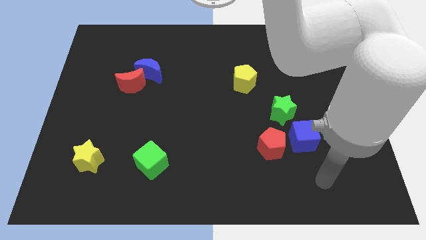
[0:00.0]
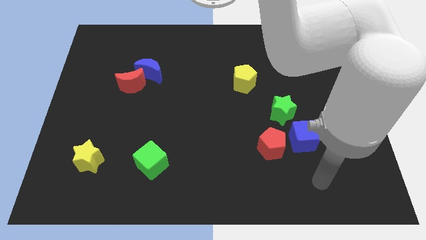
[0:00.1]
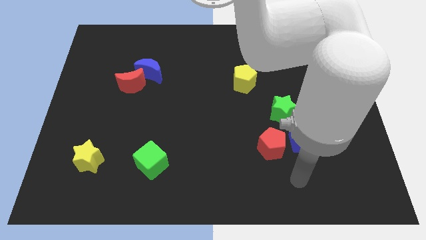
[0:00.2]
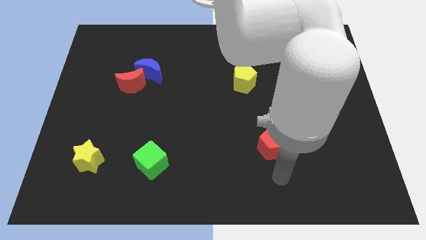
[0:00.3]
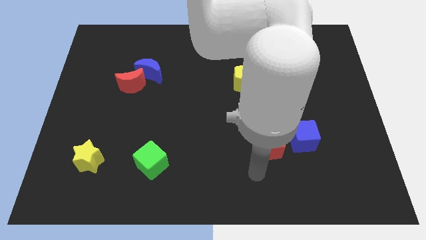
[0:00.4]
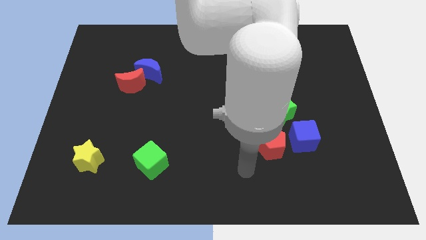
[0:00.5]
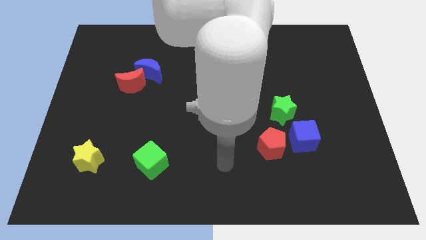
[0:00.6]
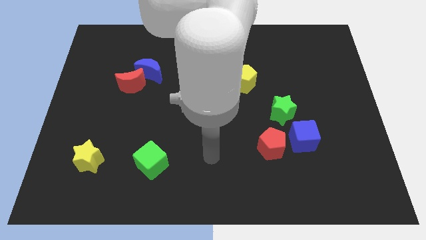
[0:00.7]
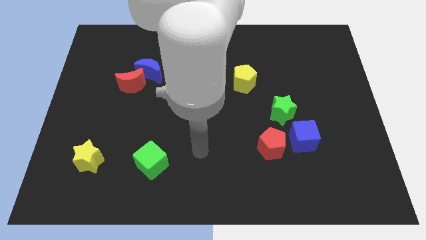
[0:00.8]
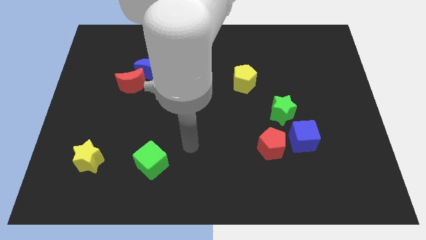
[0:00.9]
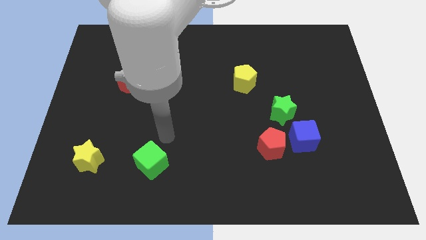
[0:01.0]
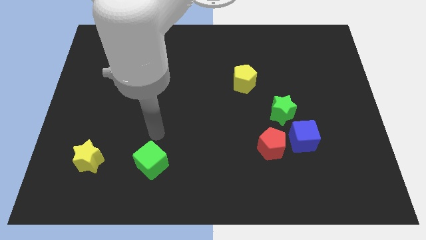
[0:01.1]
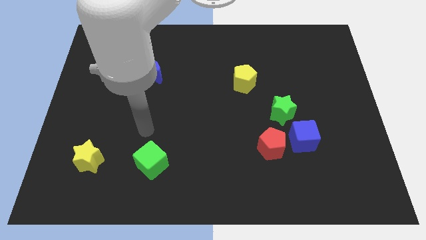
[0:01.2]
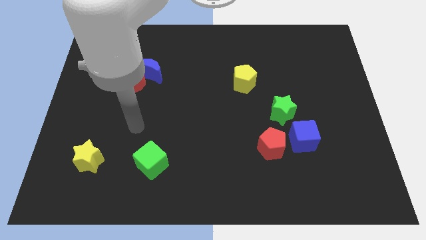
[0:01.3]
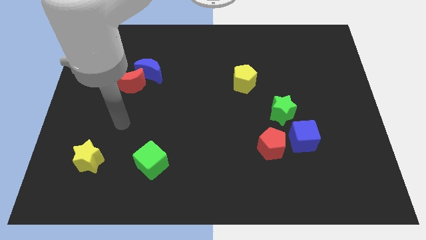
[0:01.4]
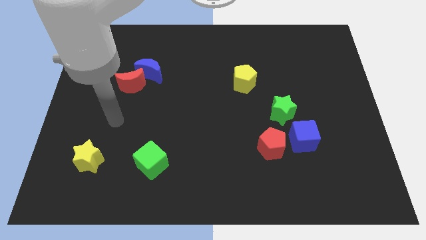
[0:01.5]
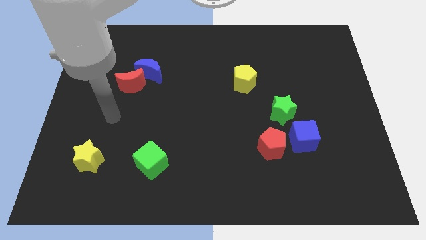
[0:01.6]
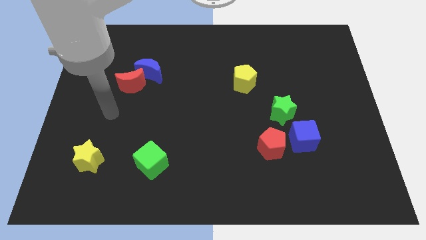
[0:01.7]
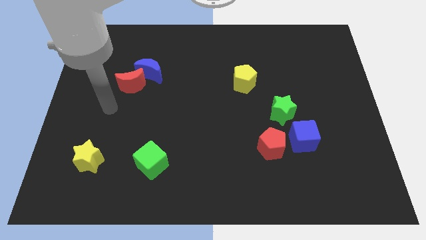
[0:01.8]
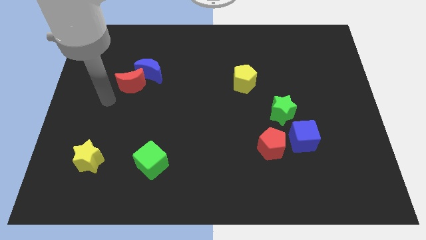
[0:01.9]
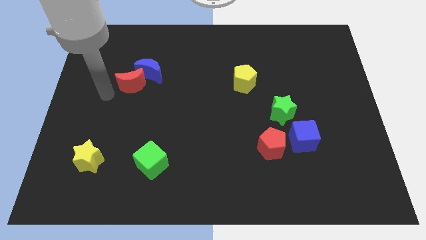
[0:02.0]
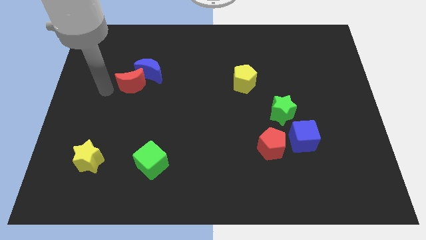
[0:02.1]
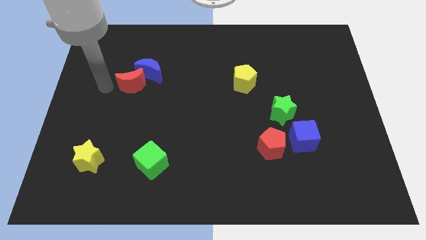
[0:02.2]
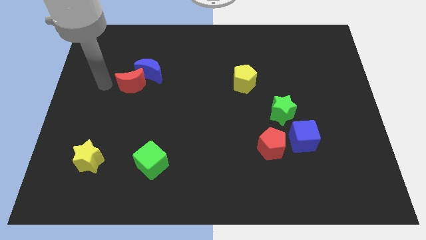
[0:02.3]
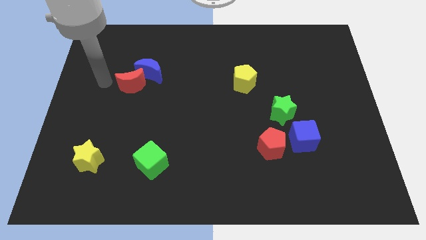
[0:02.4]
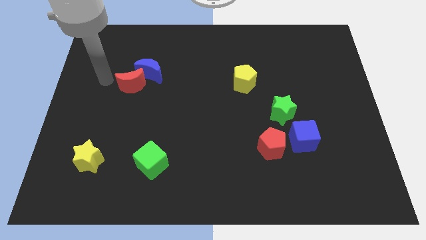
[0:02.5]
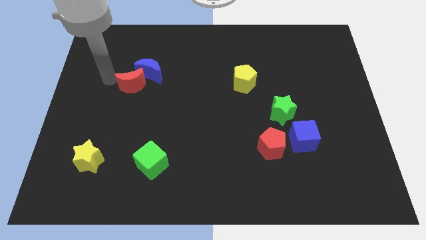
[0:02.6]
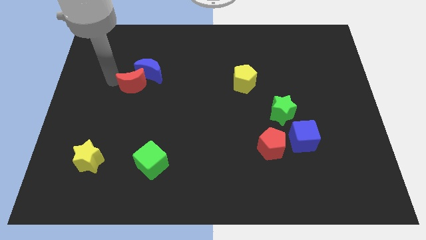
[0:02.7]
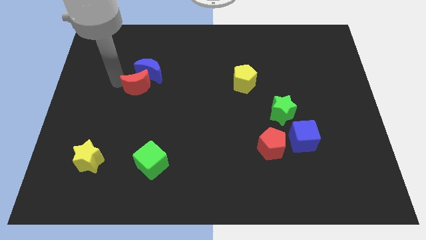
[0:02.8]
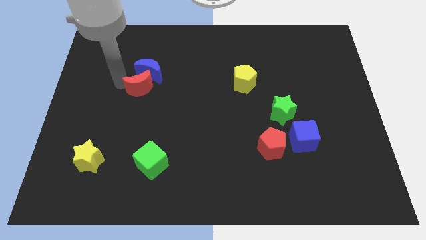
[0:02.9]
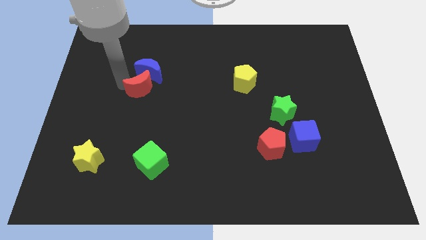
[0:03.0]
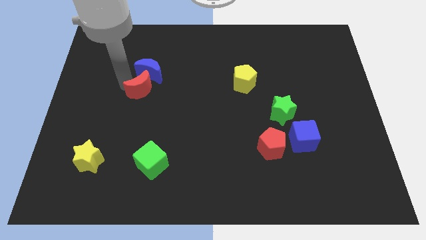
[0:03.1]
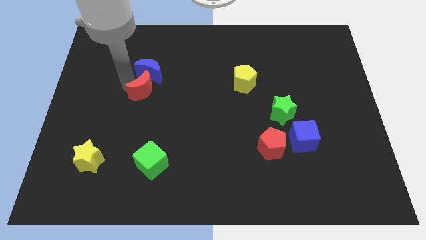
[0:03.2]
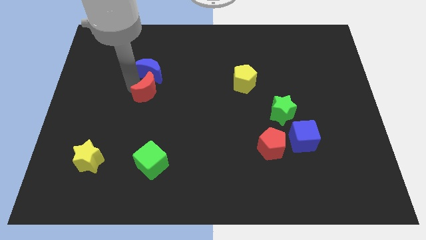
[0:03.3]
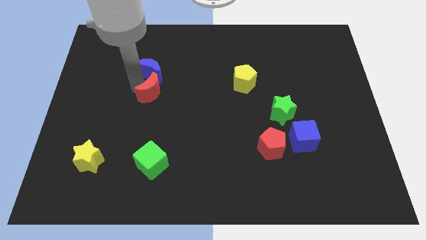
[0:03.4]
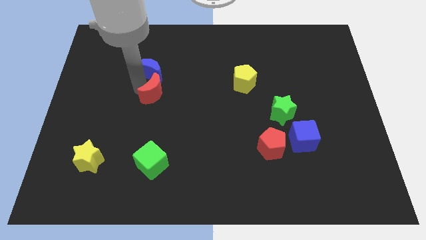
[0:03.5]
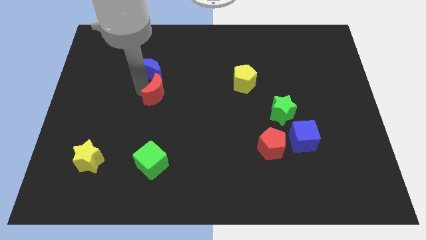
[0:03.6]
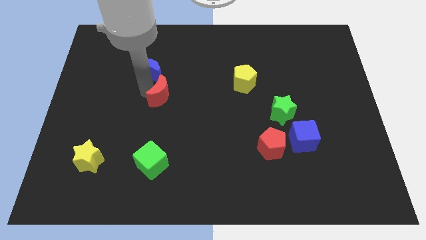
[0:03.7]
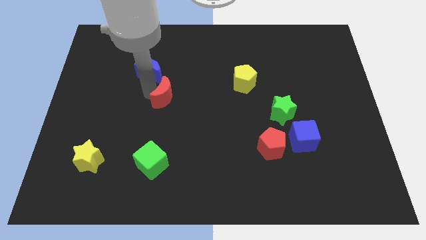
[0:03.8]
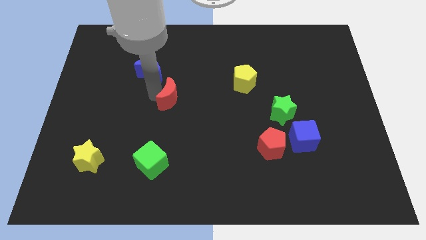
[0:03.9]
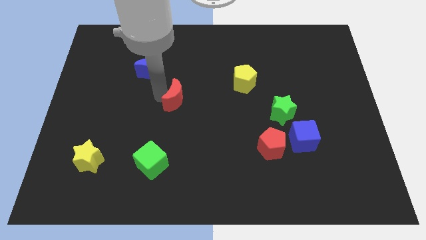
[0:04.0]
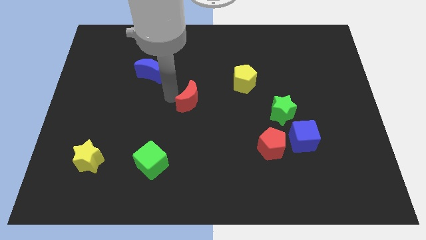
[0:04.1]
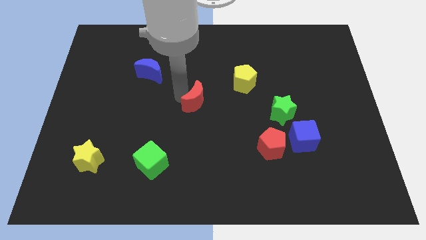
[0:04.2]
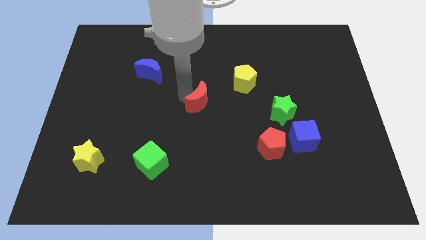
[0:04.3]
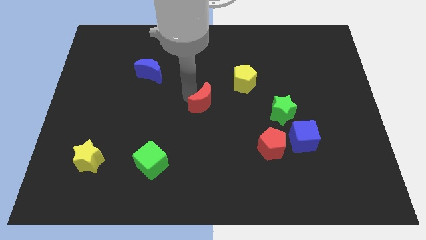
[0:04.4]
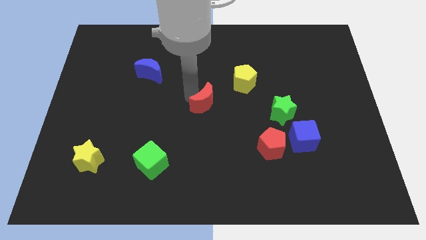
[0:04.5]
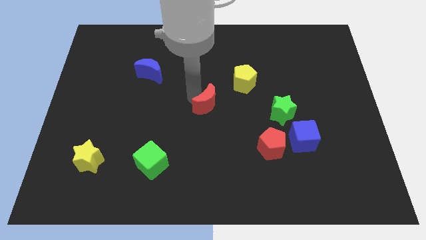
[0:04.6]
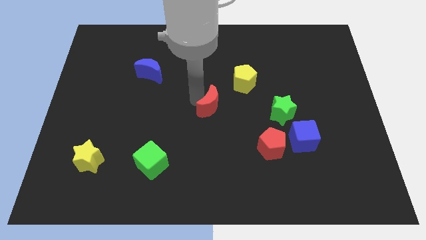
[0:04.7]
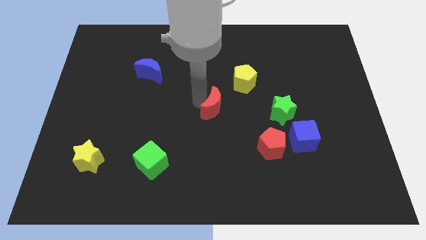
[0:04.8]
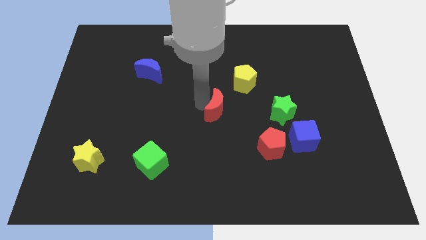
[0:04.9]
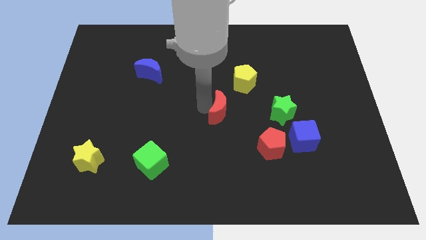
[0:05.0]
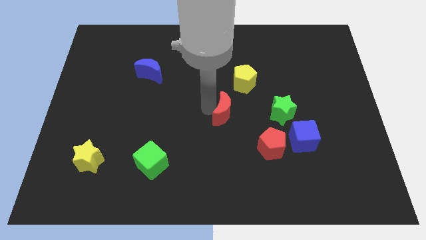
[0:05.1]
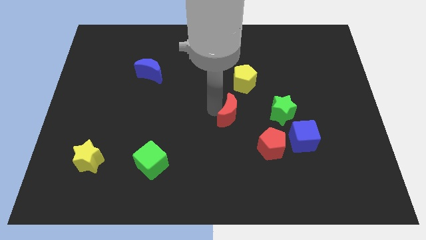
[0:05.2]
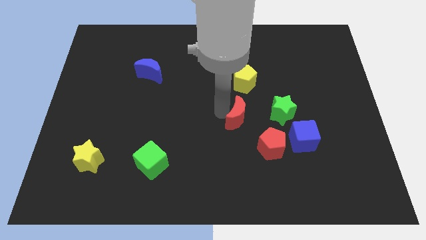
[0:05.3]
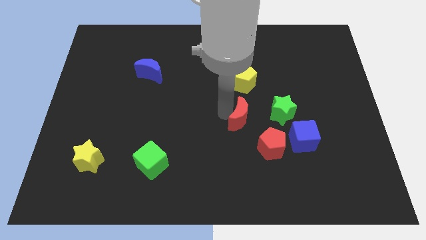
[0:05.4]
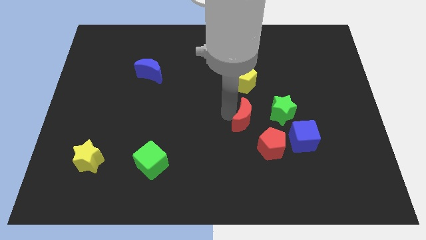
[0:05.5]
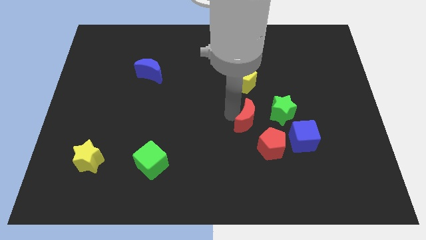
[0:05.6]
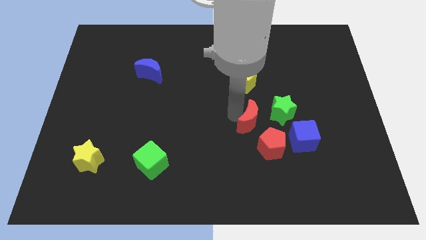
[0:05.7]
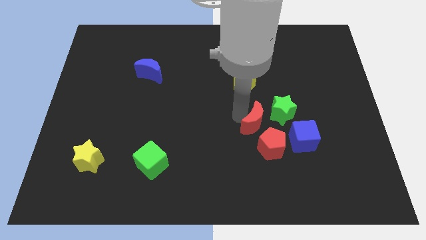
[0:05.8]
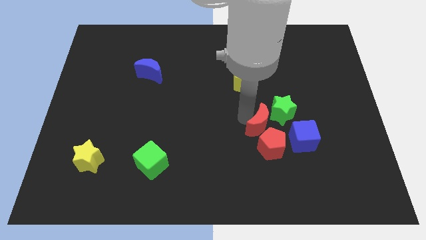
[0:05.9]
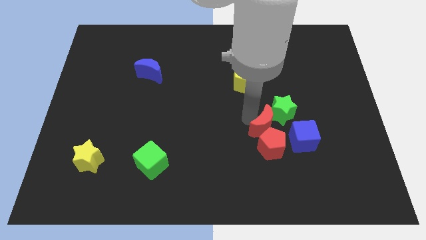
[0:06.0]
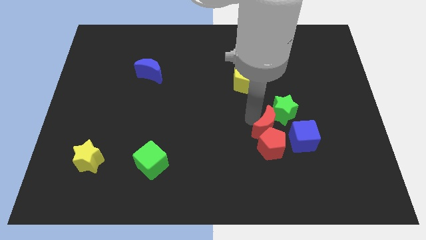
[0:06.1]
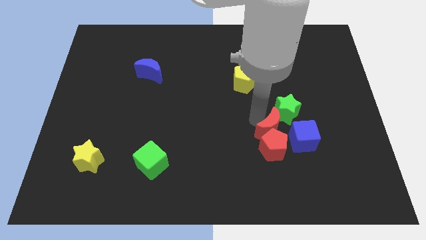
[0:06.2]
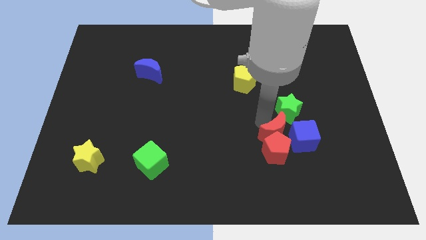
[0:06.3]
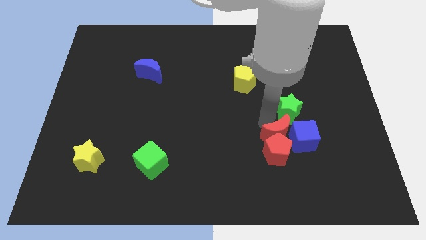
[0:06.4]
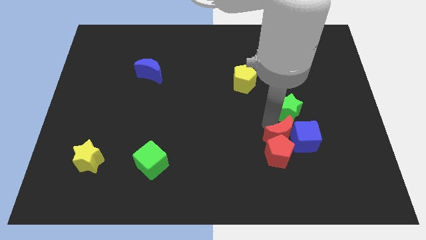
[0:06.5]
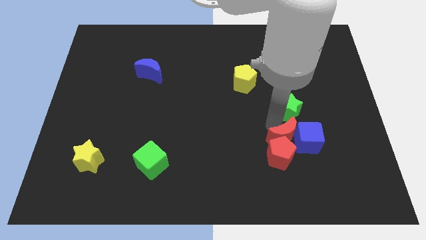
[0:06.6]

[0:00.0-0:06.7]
slide the red moon to the blue cube

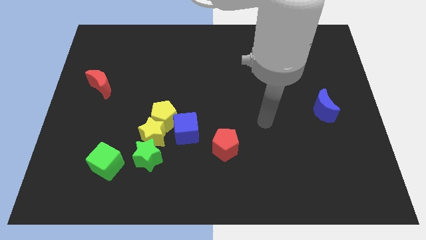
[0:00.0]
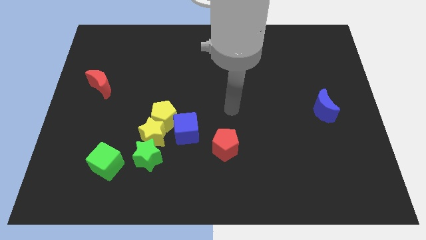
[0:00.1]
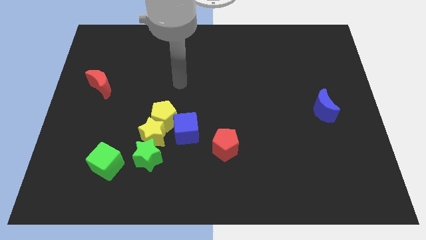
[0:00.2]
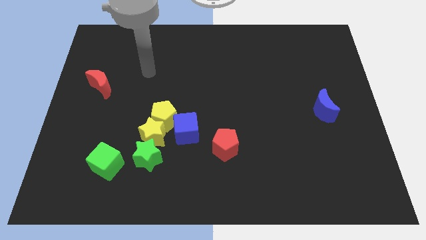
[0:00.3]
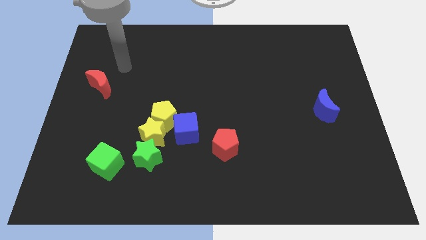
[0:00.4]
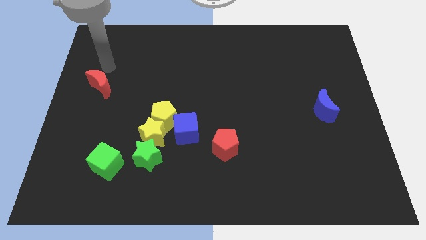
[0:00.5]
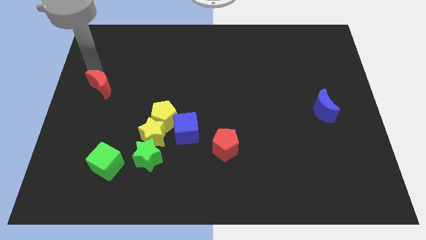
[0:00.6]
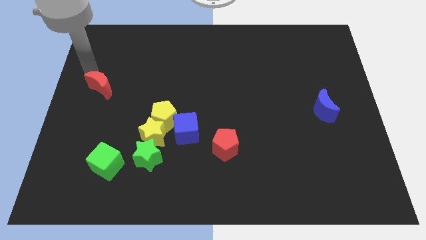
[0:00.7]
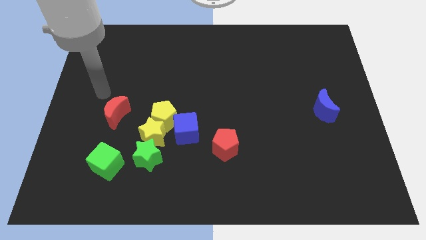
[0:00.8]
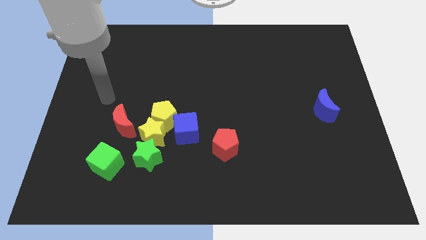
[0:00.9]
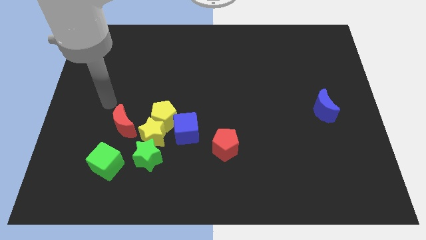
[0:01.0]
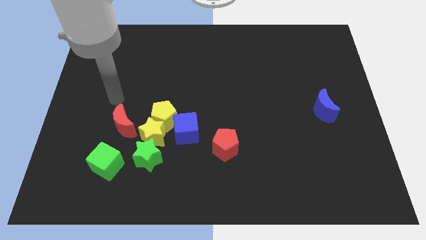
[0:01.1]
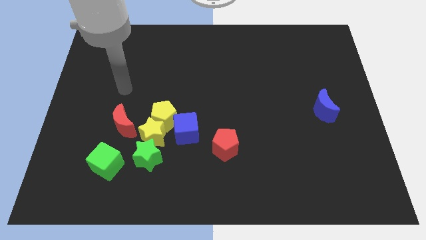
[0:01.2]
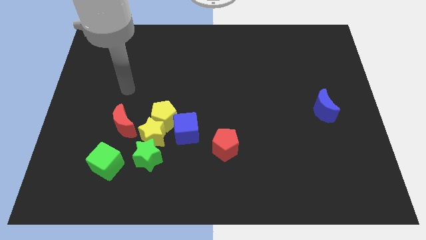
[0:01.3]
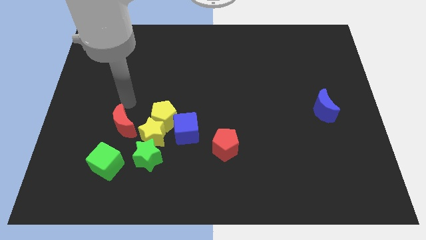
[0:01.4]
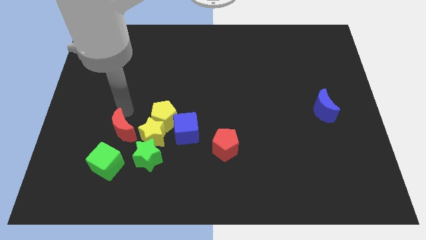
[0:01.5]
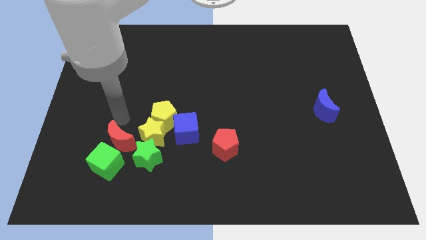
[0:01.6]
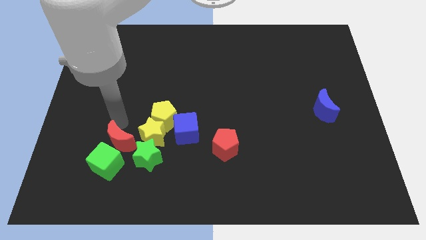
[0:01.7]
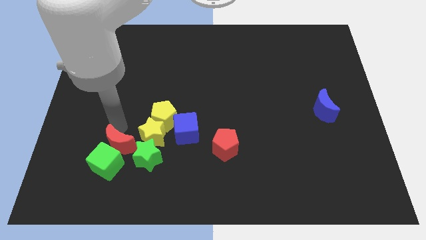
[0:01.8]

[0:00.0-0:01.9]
put the red moon towards the green cube

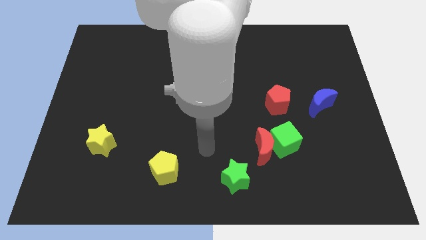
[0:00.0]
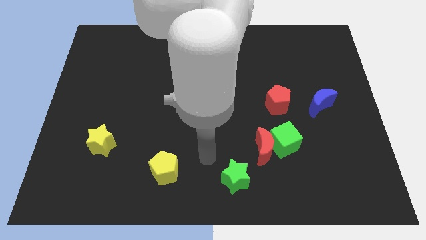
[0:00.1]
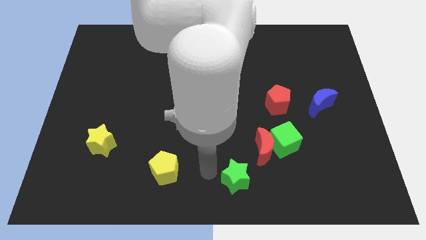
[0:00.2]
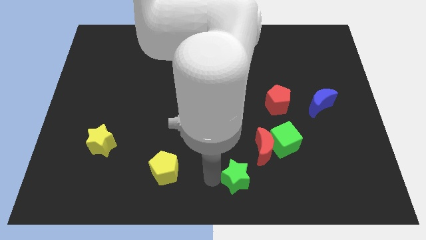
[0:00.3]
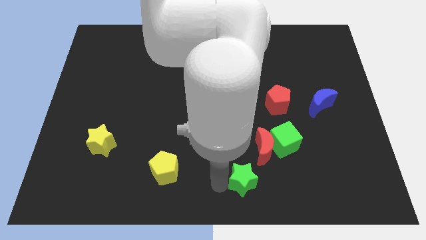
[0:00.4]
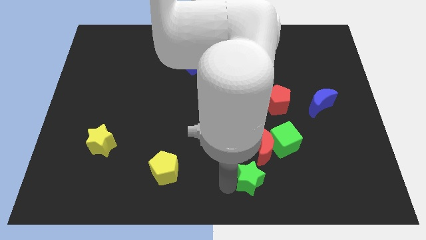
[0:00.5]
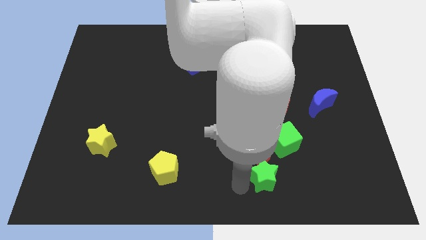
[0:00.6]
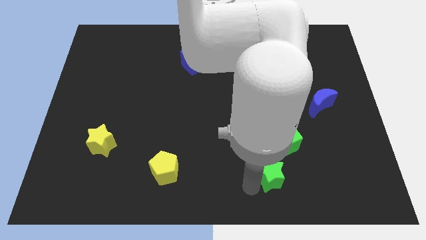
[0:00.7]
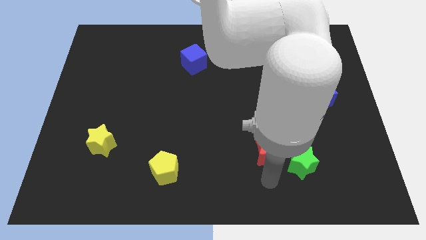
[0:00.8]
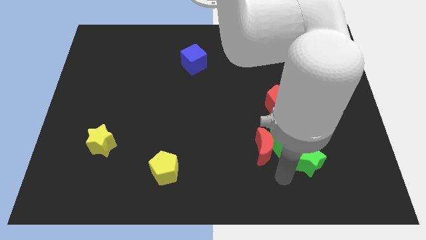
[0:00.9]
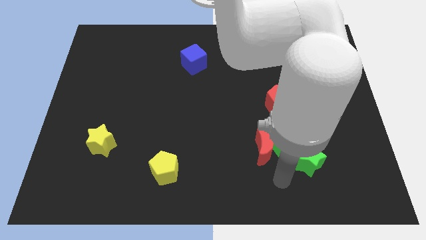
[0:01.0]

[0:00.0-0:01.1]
put the green star to the green cube
